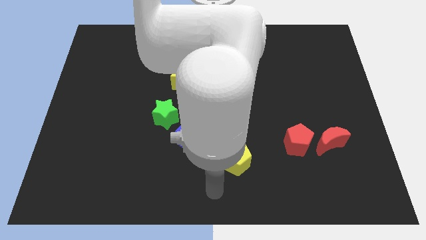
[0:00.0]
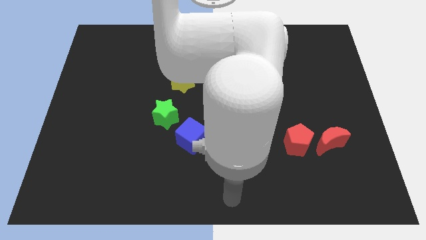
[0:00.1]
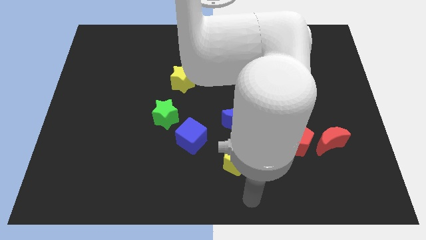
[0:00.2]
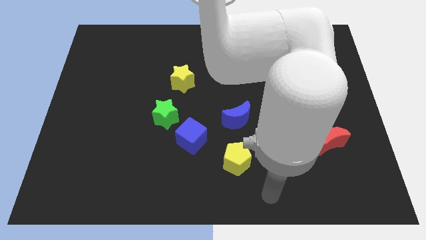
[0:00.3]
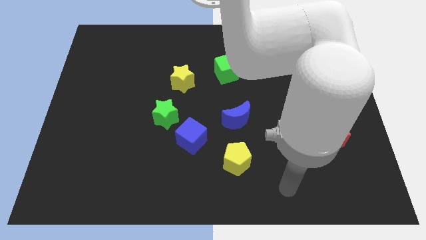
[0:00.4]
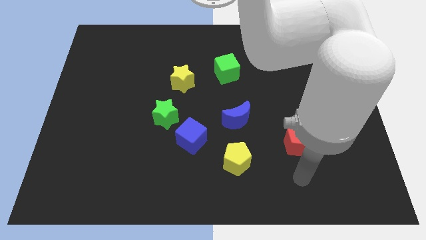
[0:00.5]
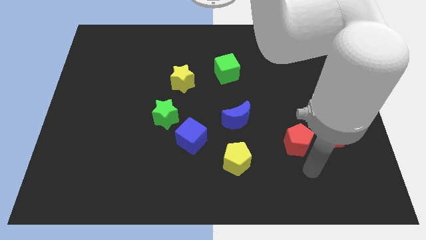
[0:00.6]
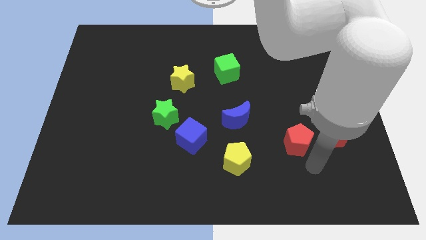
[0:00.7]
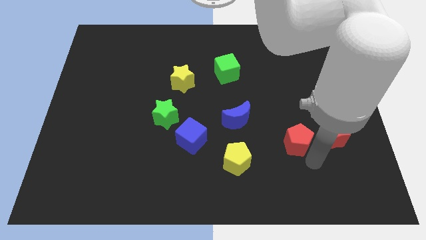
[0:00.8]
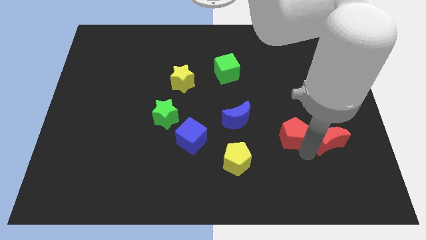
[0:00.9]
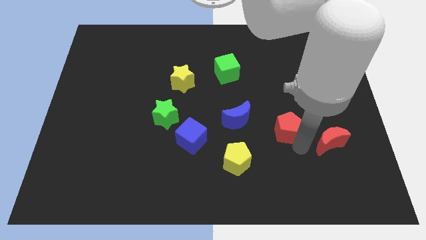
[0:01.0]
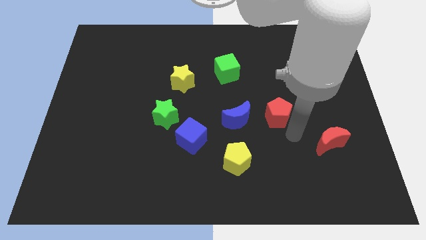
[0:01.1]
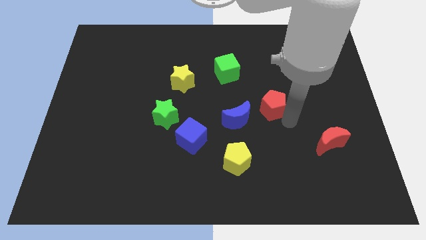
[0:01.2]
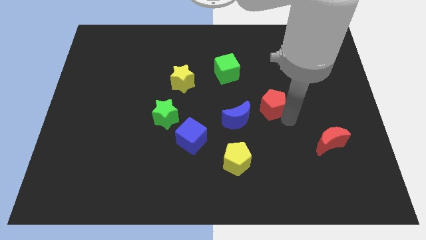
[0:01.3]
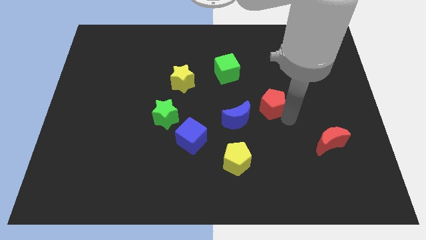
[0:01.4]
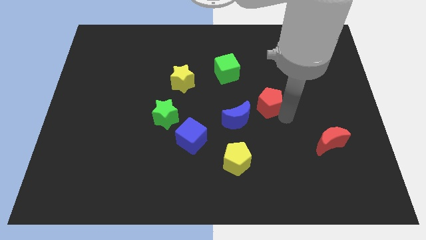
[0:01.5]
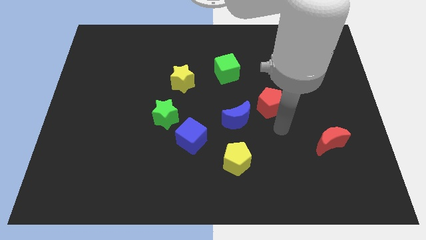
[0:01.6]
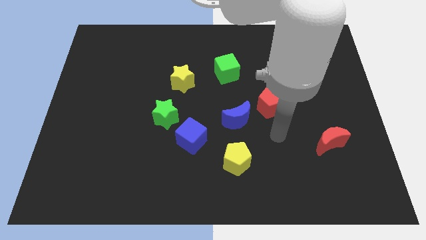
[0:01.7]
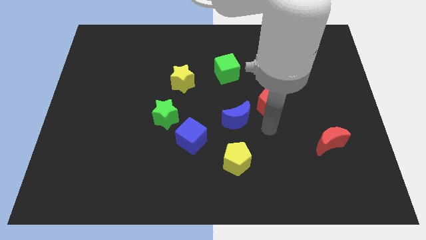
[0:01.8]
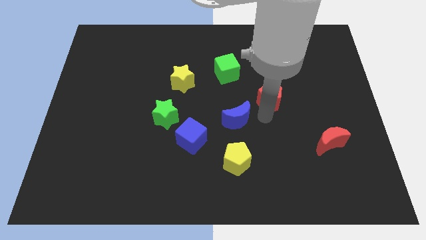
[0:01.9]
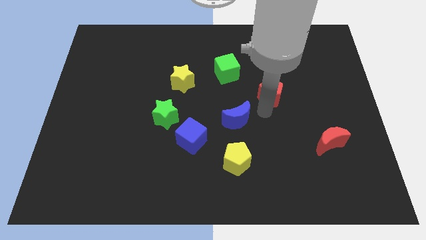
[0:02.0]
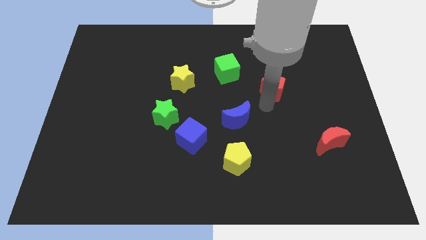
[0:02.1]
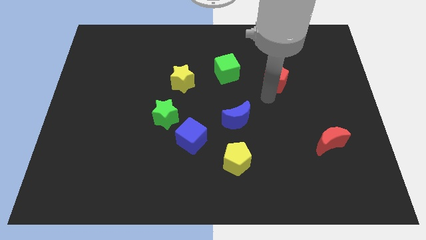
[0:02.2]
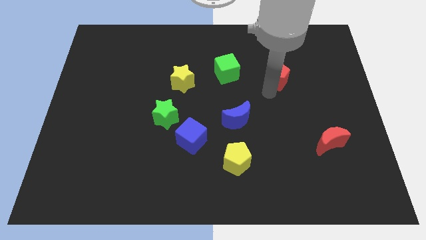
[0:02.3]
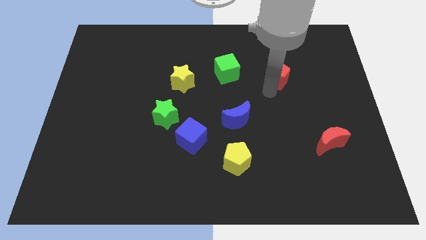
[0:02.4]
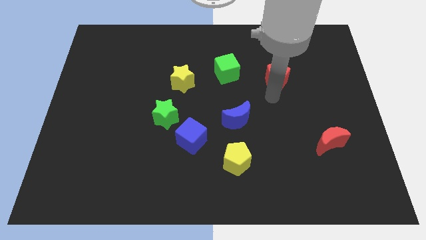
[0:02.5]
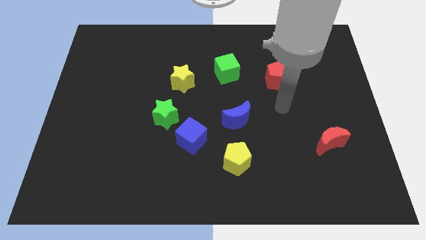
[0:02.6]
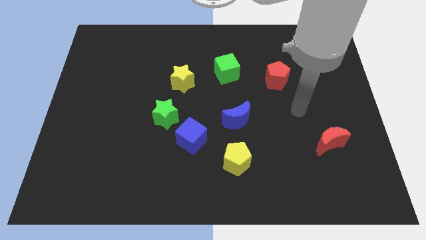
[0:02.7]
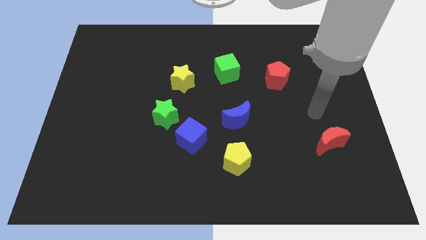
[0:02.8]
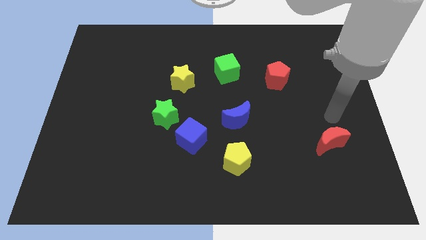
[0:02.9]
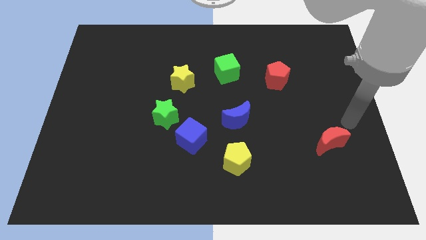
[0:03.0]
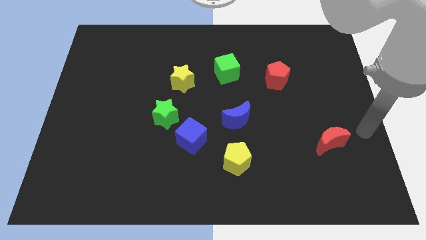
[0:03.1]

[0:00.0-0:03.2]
move the red pentagon away from the red crescent

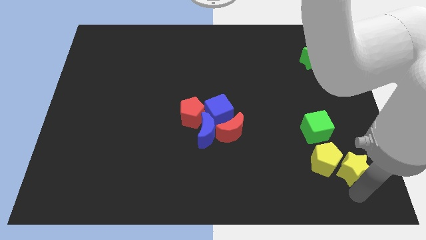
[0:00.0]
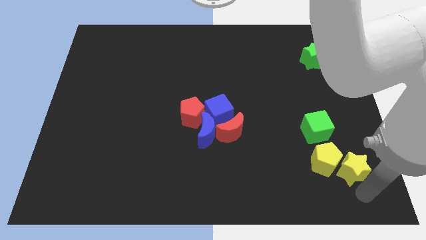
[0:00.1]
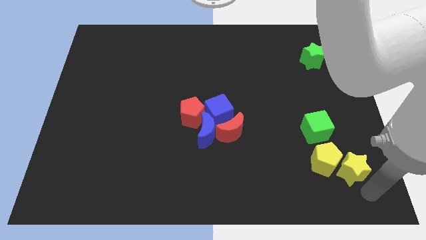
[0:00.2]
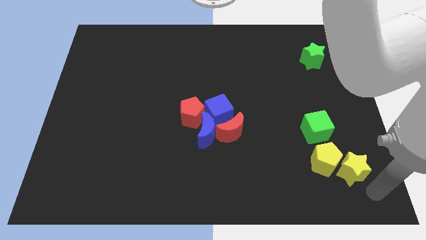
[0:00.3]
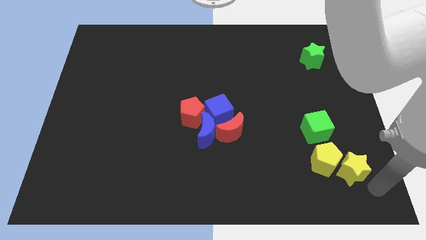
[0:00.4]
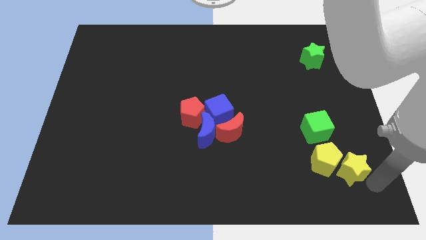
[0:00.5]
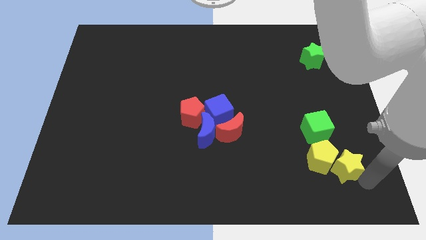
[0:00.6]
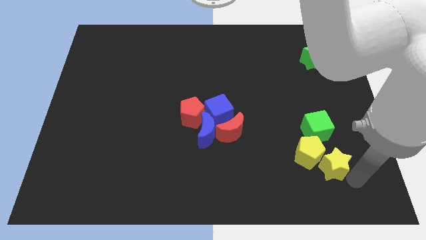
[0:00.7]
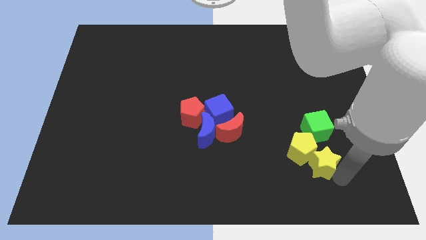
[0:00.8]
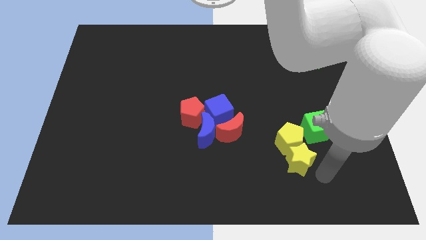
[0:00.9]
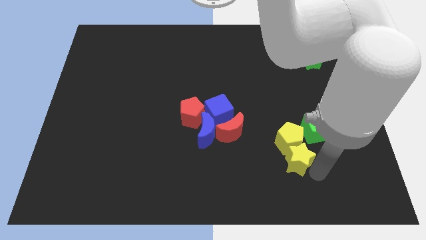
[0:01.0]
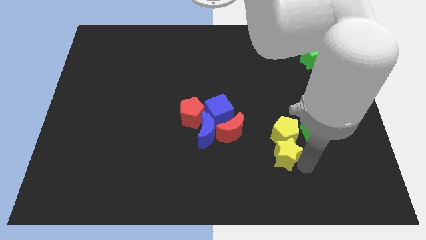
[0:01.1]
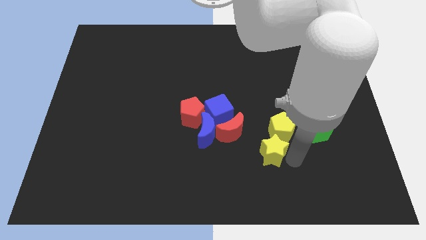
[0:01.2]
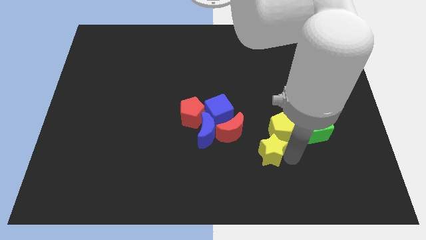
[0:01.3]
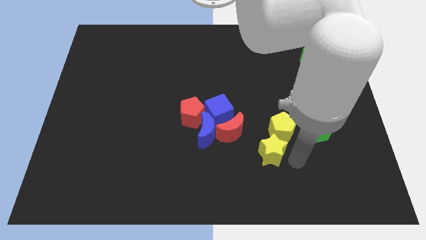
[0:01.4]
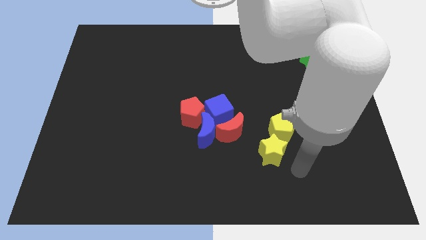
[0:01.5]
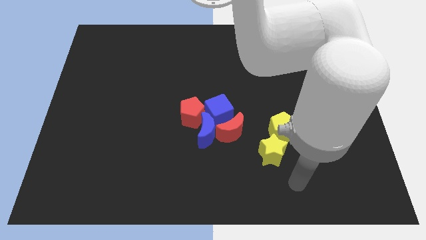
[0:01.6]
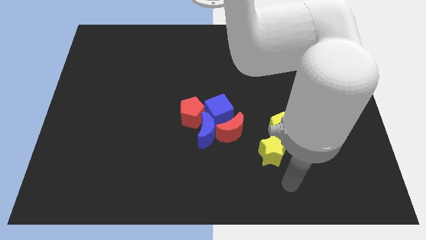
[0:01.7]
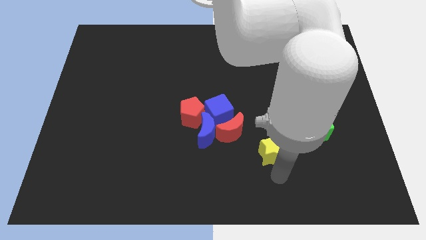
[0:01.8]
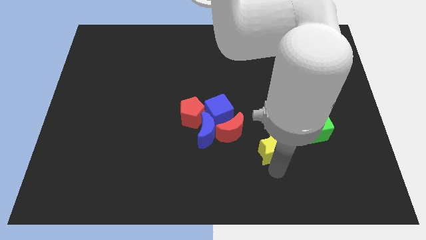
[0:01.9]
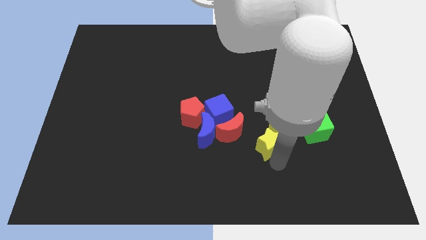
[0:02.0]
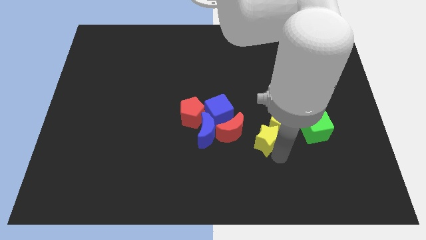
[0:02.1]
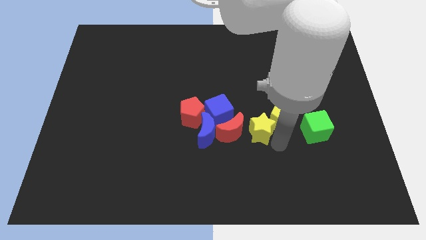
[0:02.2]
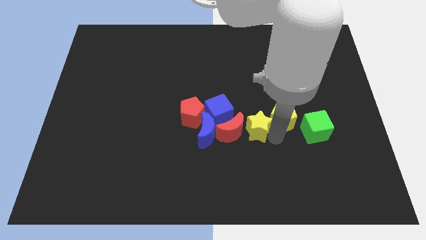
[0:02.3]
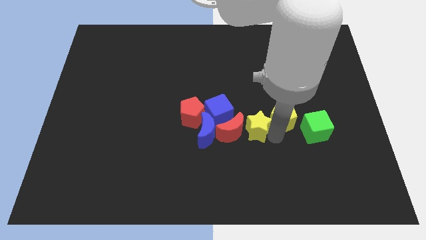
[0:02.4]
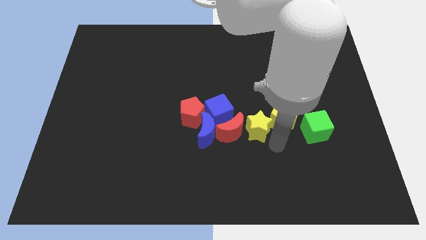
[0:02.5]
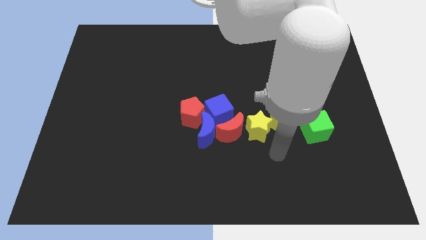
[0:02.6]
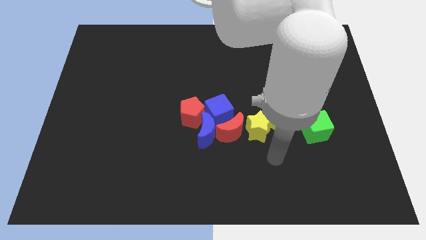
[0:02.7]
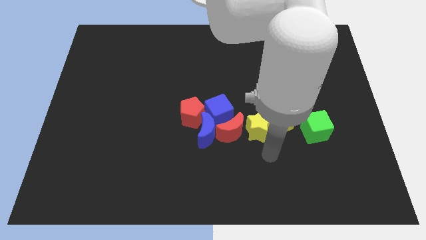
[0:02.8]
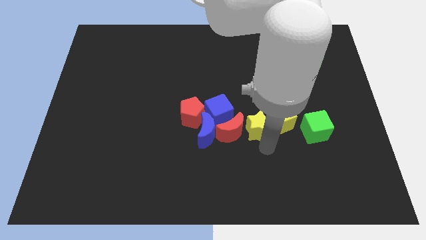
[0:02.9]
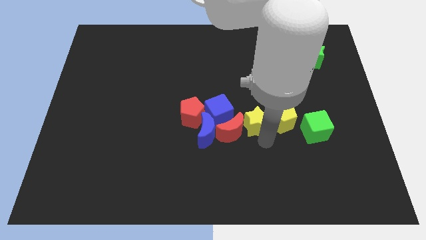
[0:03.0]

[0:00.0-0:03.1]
push yellow pentagon in between red crescent and yellow pentagon

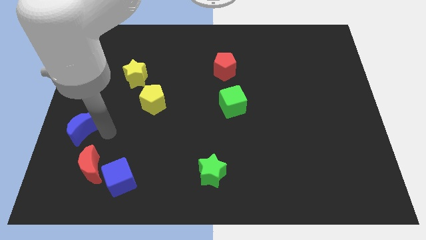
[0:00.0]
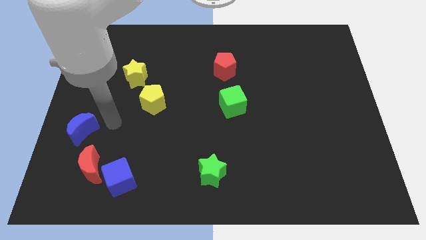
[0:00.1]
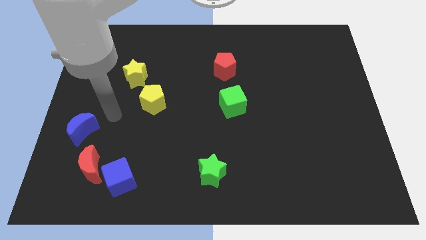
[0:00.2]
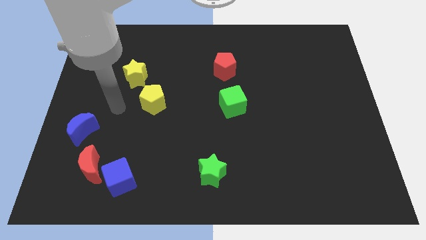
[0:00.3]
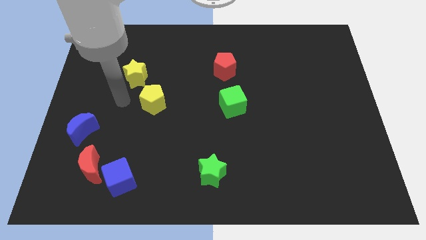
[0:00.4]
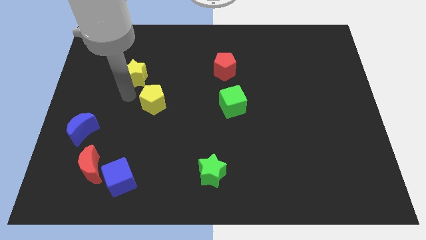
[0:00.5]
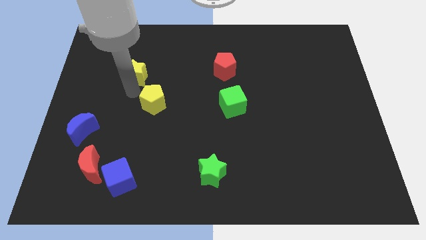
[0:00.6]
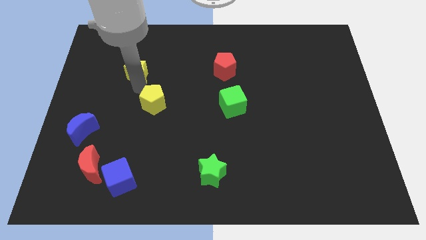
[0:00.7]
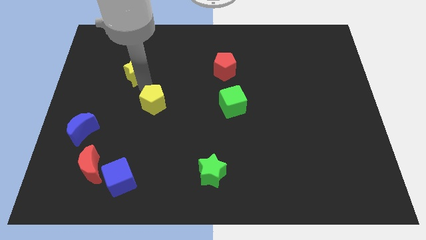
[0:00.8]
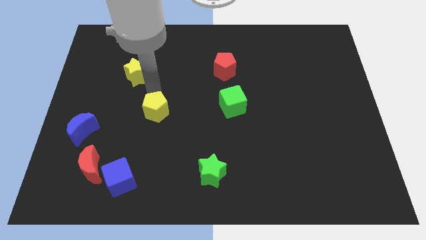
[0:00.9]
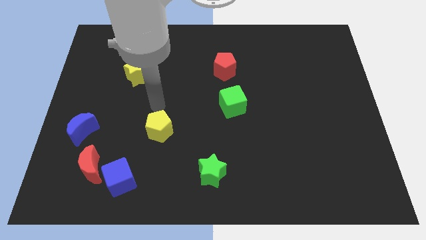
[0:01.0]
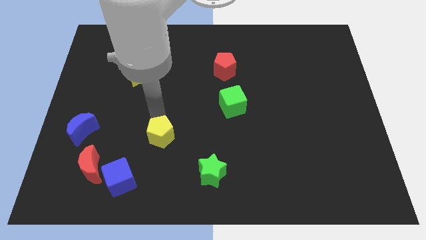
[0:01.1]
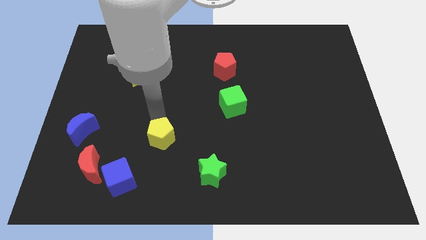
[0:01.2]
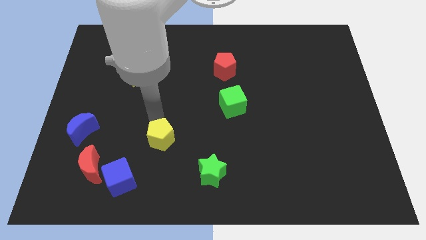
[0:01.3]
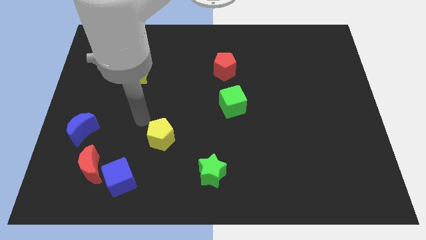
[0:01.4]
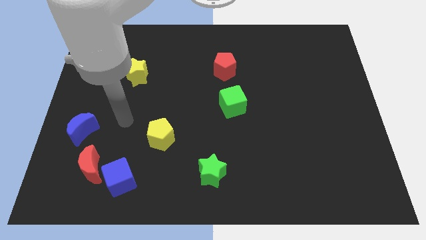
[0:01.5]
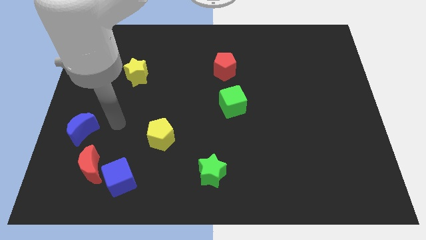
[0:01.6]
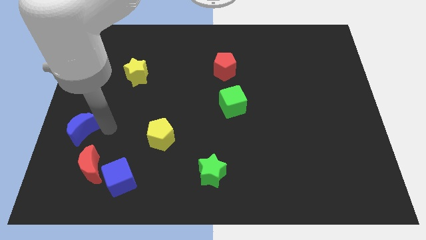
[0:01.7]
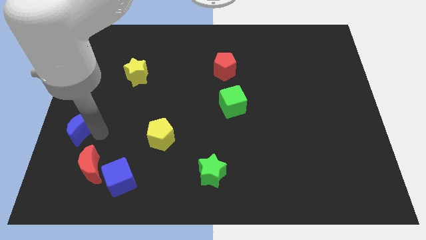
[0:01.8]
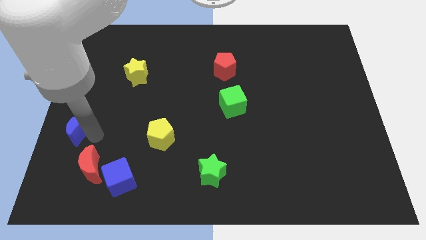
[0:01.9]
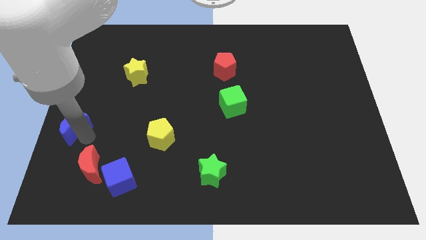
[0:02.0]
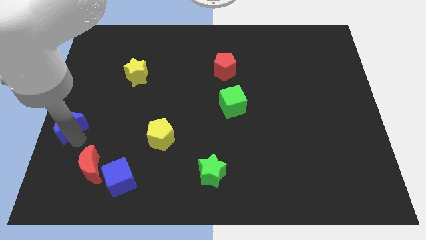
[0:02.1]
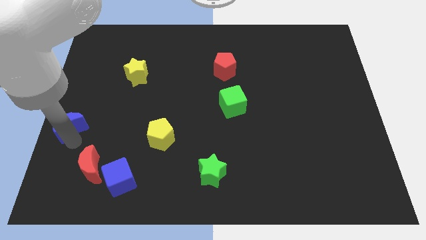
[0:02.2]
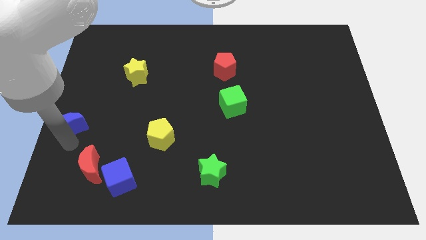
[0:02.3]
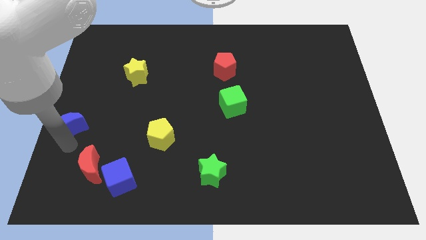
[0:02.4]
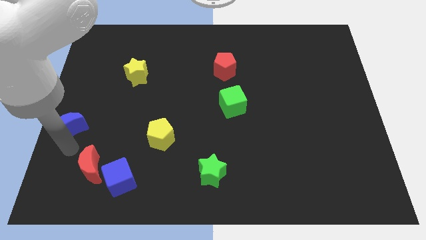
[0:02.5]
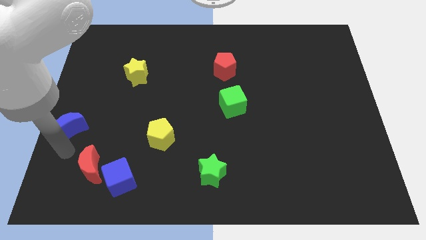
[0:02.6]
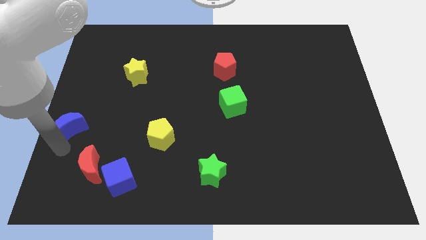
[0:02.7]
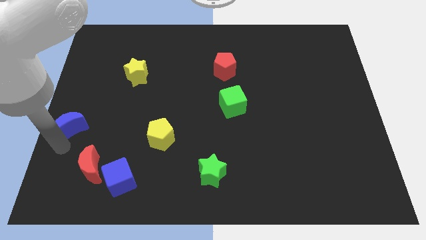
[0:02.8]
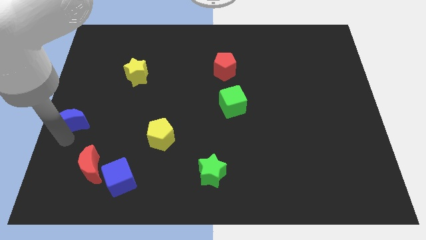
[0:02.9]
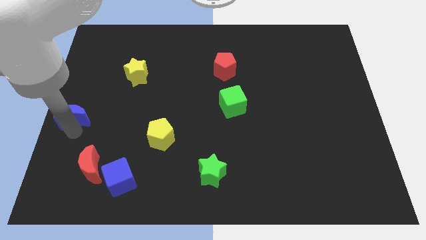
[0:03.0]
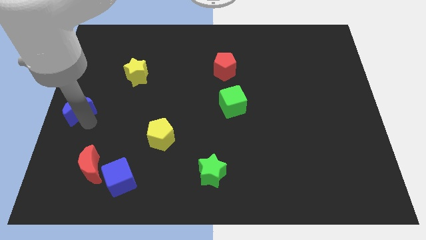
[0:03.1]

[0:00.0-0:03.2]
slightly move the yellow pentagon and the blue crescent in opposite directions
